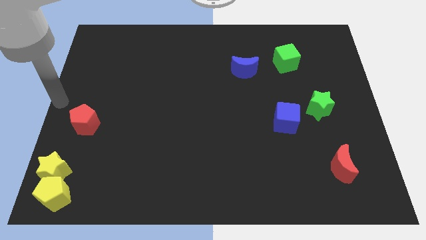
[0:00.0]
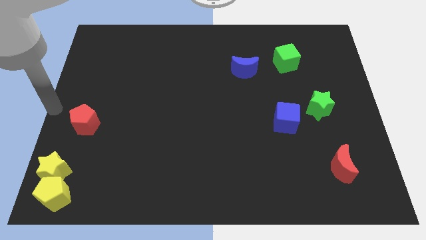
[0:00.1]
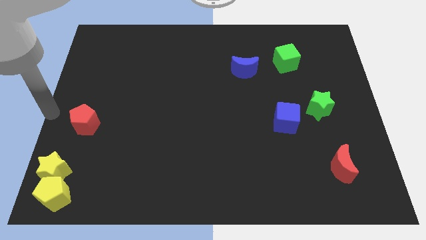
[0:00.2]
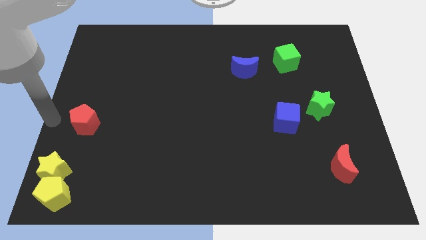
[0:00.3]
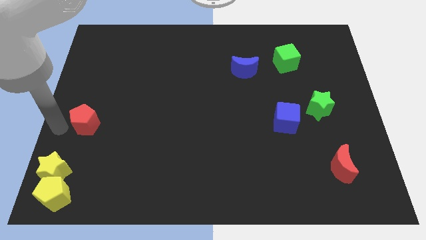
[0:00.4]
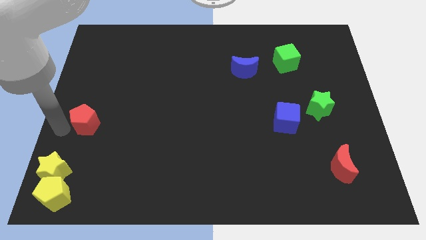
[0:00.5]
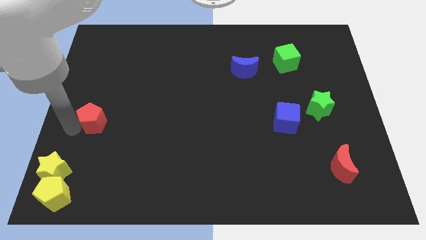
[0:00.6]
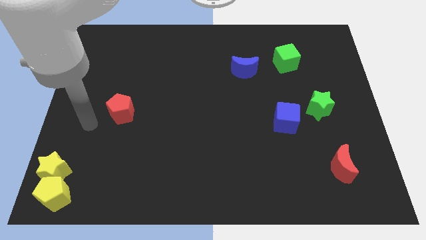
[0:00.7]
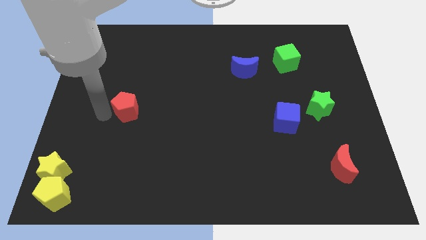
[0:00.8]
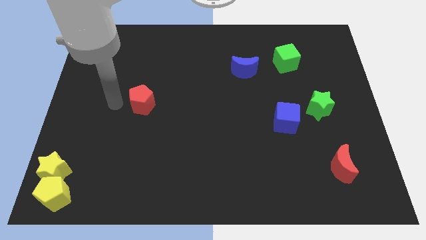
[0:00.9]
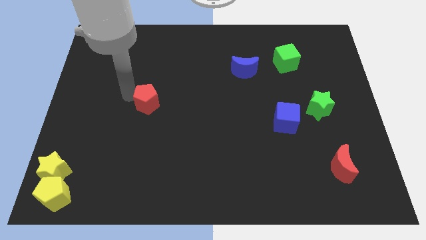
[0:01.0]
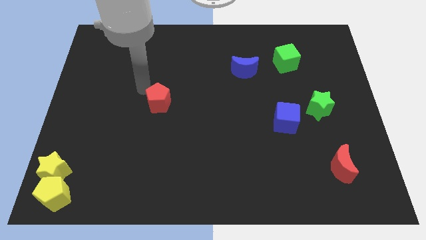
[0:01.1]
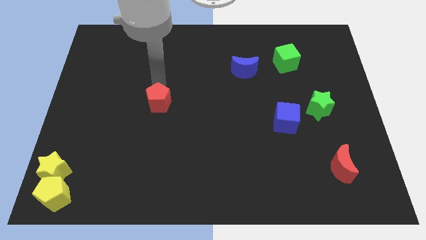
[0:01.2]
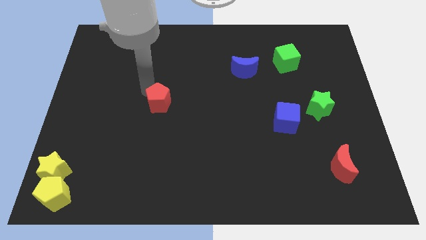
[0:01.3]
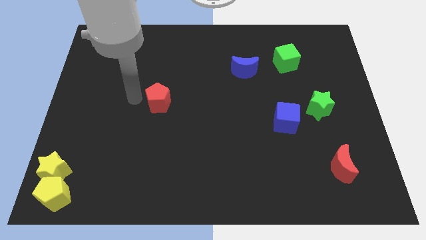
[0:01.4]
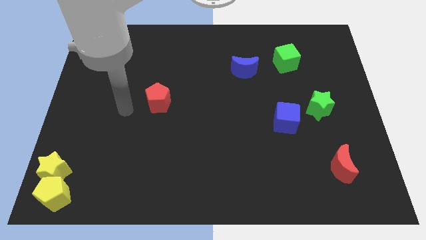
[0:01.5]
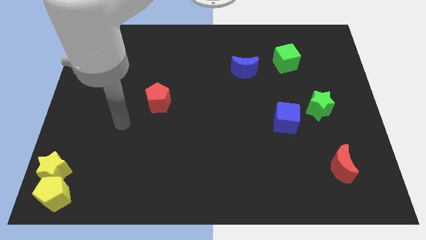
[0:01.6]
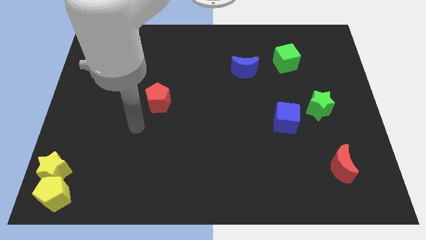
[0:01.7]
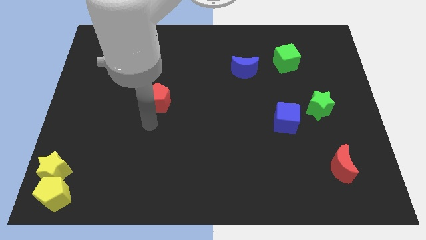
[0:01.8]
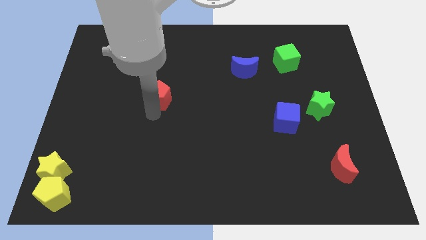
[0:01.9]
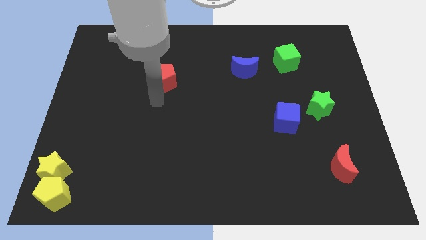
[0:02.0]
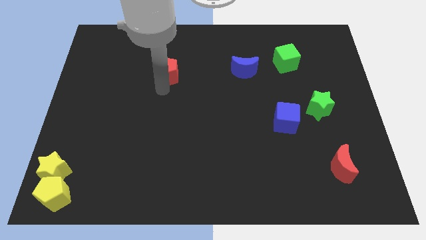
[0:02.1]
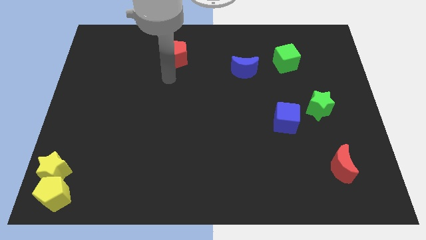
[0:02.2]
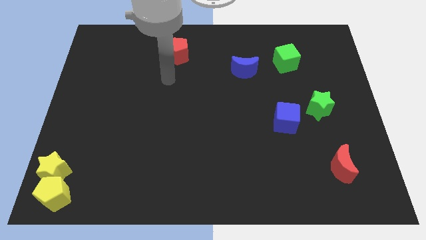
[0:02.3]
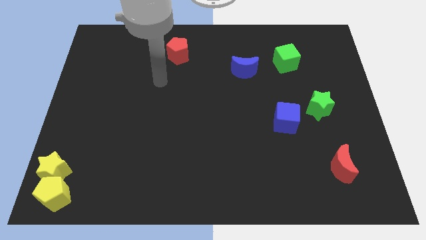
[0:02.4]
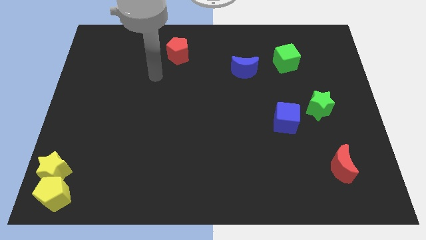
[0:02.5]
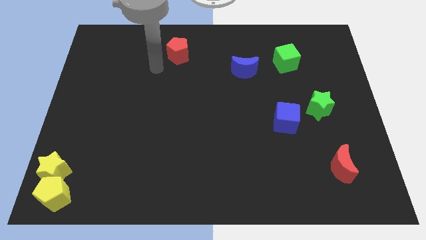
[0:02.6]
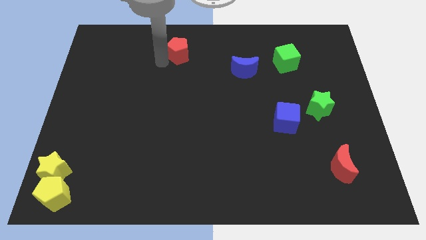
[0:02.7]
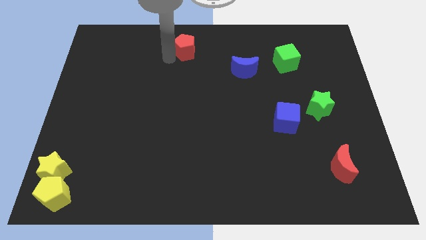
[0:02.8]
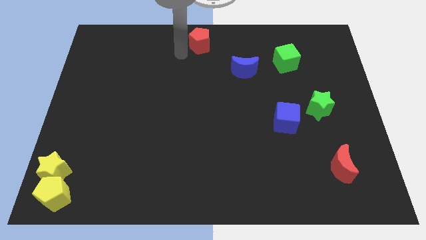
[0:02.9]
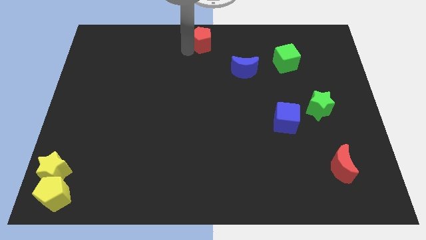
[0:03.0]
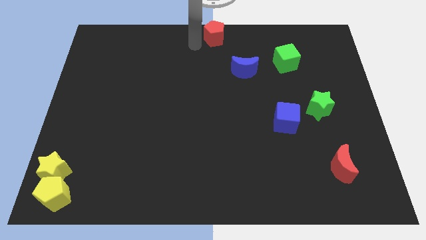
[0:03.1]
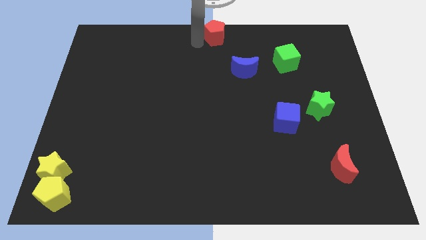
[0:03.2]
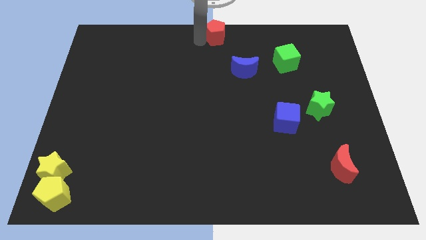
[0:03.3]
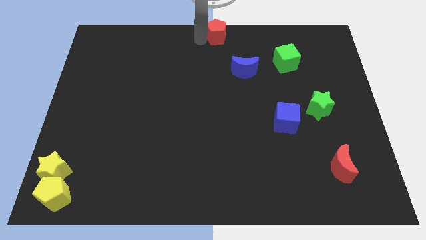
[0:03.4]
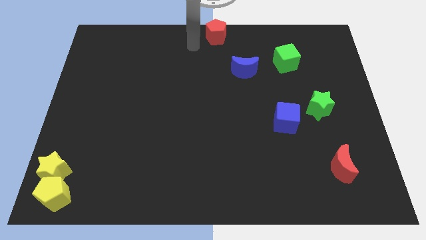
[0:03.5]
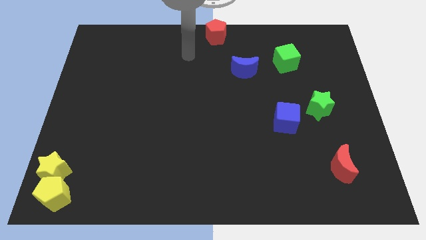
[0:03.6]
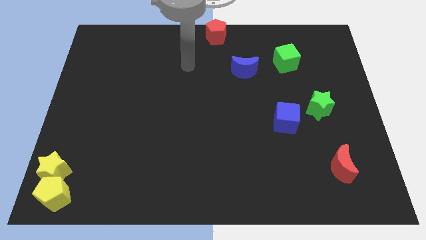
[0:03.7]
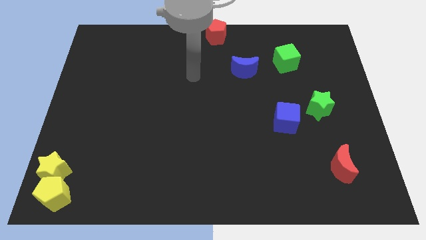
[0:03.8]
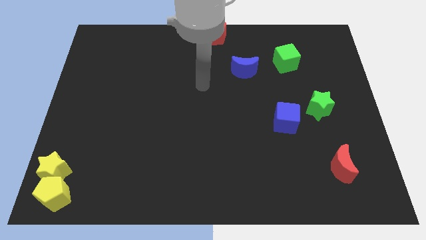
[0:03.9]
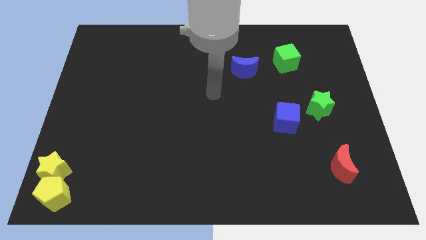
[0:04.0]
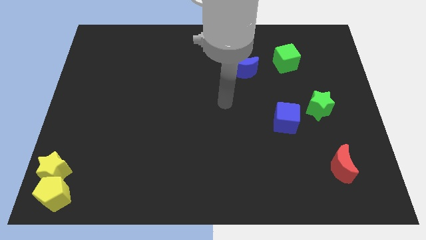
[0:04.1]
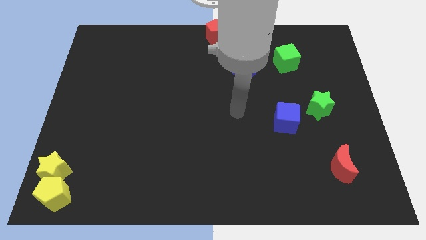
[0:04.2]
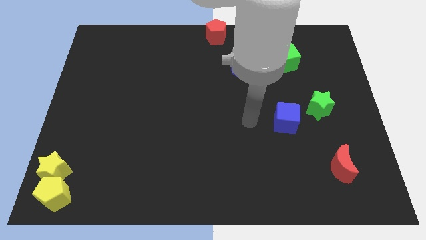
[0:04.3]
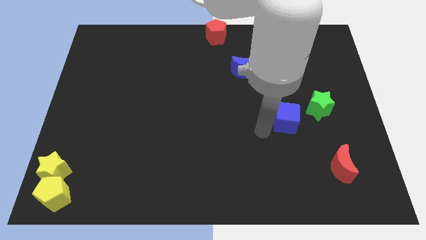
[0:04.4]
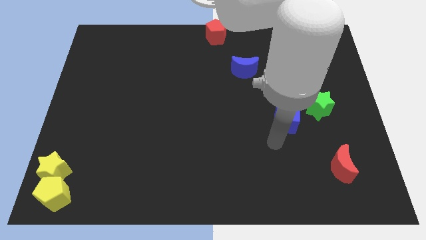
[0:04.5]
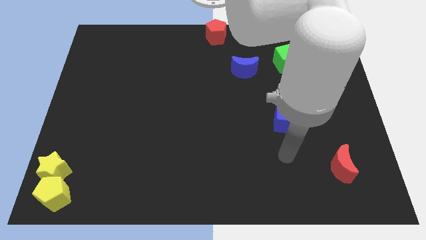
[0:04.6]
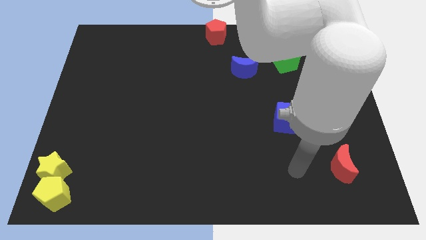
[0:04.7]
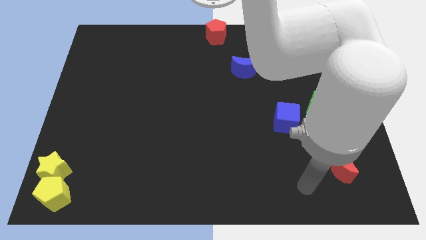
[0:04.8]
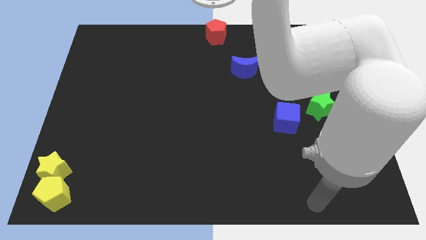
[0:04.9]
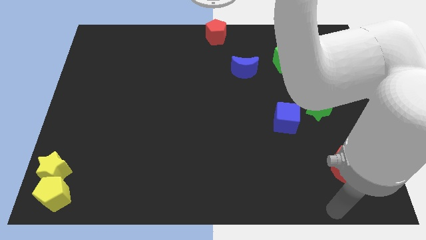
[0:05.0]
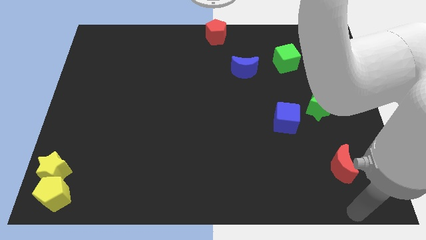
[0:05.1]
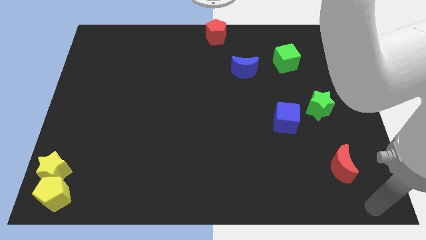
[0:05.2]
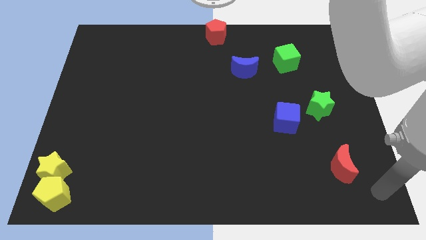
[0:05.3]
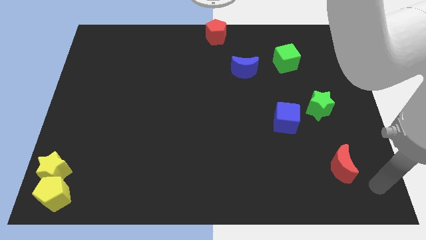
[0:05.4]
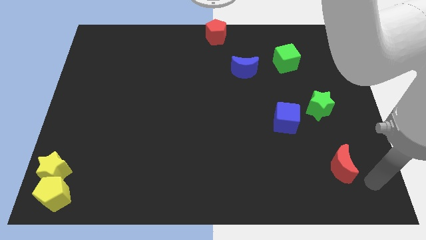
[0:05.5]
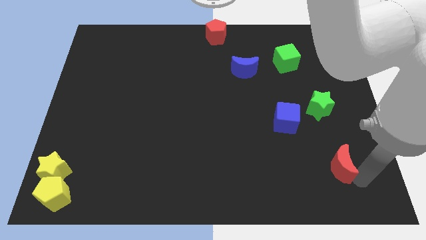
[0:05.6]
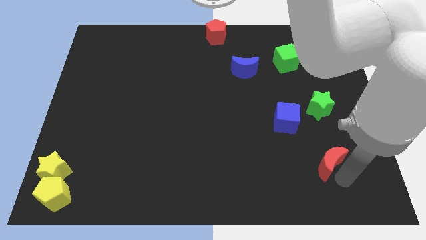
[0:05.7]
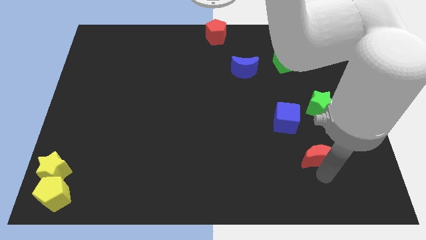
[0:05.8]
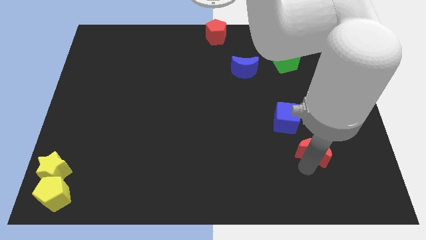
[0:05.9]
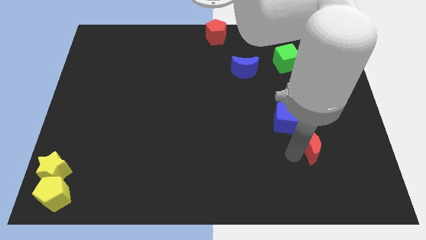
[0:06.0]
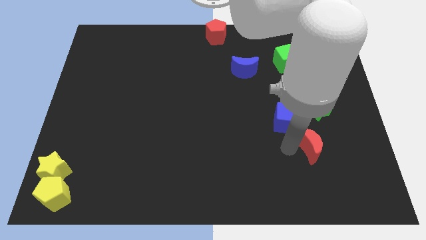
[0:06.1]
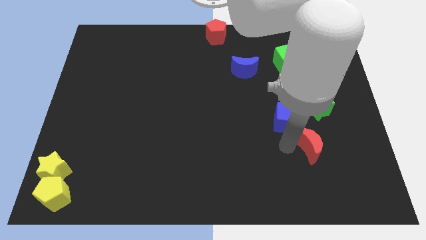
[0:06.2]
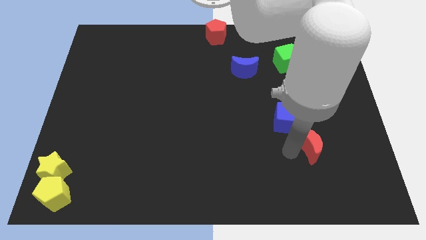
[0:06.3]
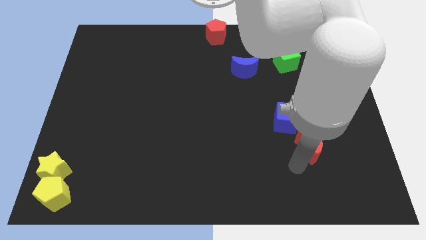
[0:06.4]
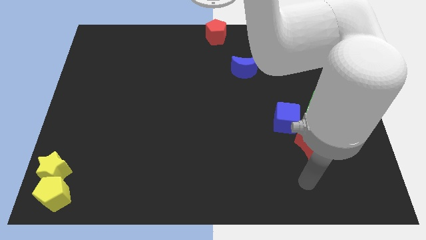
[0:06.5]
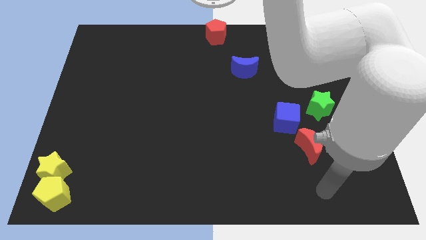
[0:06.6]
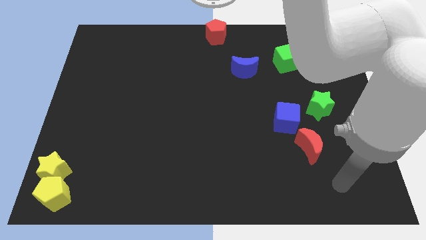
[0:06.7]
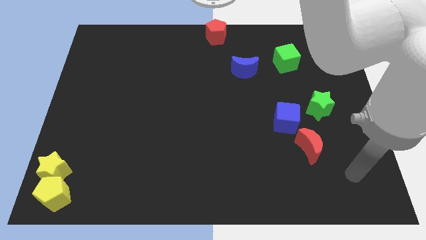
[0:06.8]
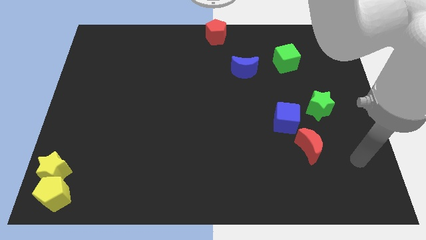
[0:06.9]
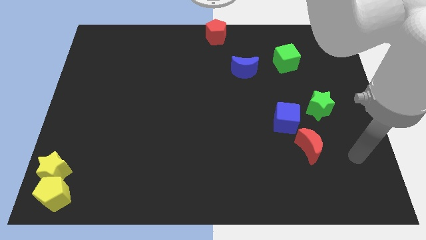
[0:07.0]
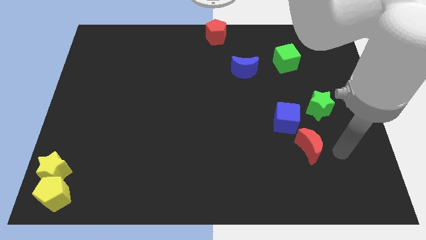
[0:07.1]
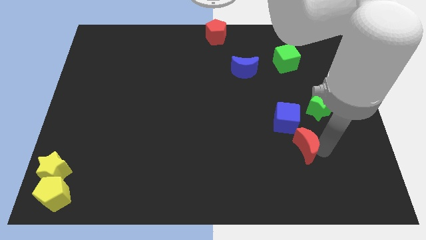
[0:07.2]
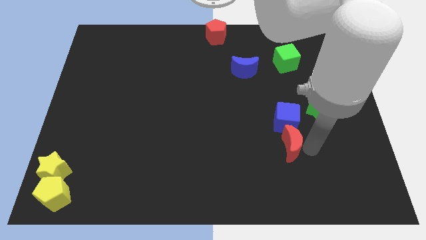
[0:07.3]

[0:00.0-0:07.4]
move the red moon to the top center of the board

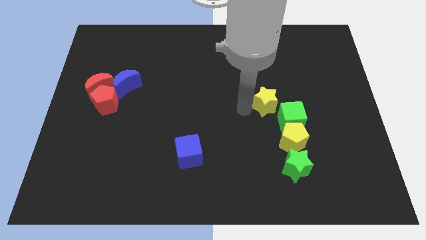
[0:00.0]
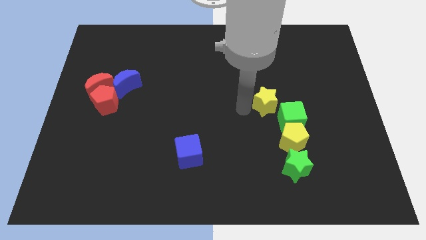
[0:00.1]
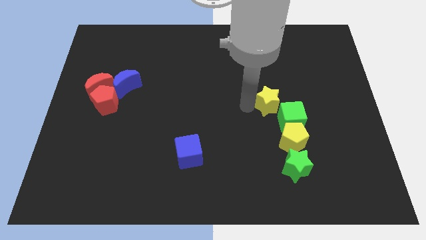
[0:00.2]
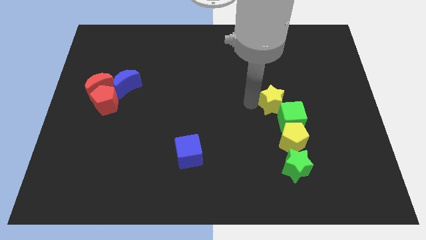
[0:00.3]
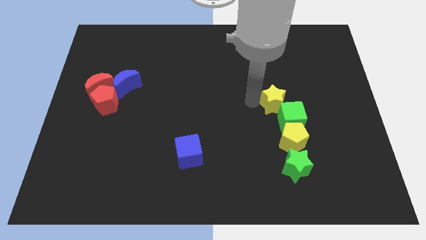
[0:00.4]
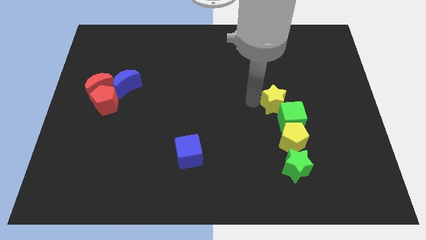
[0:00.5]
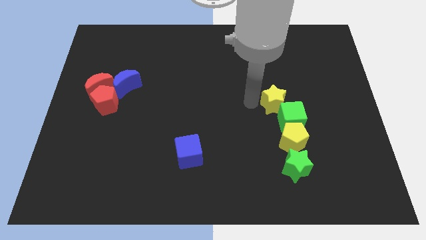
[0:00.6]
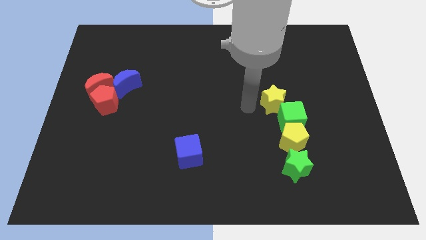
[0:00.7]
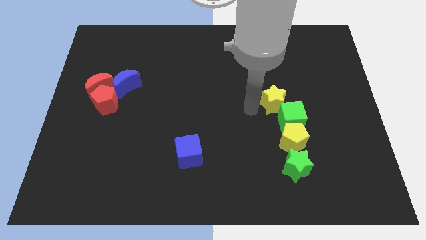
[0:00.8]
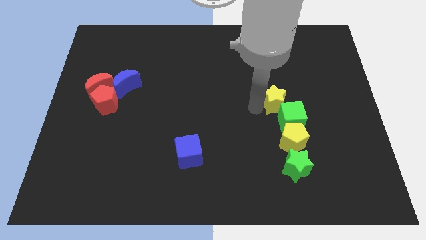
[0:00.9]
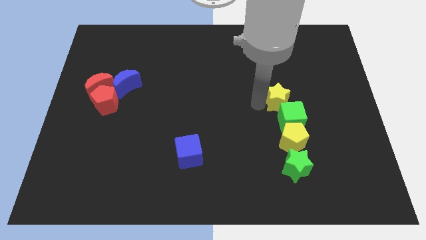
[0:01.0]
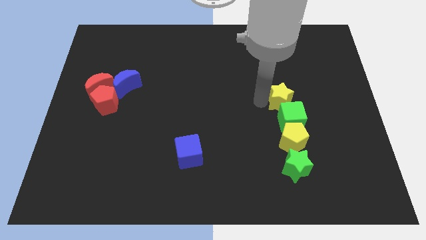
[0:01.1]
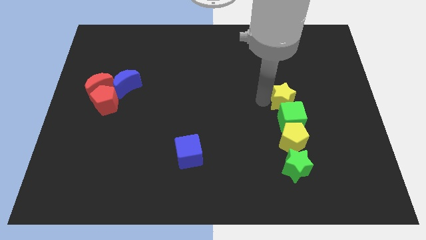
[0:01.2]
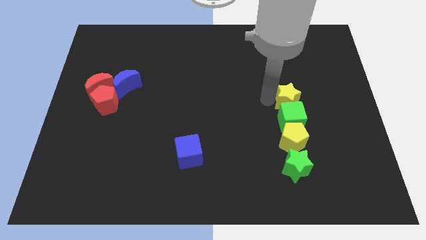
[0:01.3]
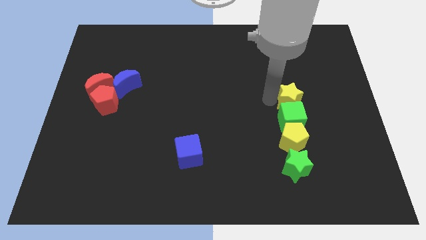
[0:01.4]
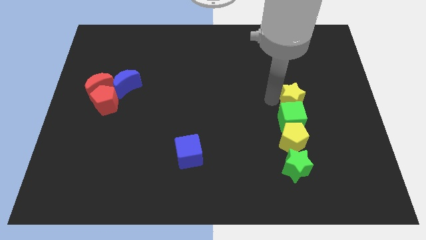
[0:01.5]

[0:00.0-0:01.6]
place the yellow star to the top of the green cube

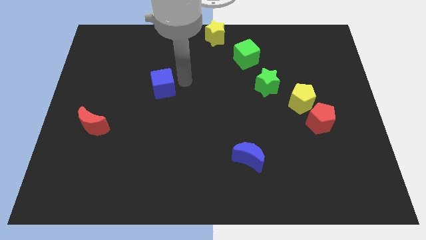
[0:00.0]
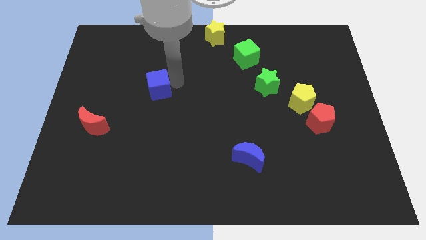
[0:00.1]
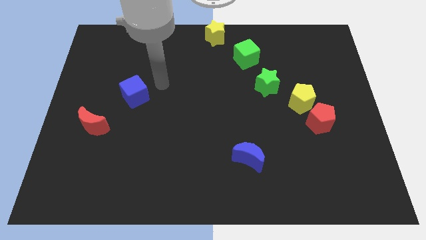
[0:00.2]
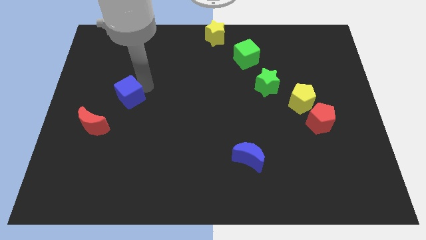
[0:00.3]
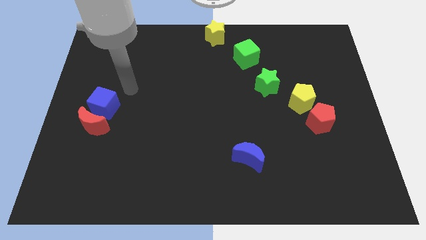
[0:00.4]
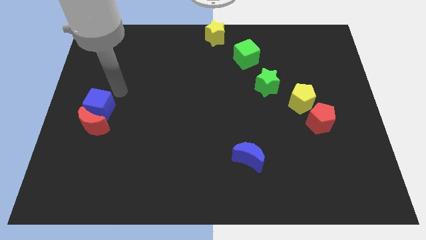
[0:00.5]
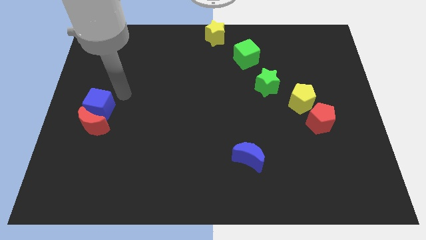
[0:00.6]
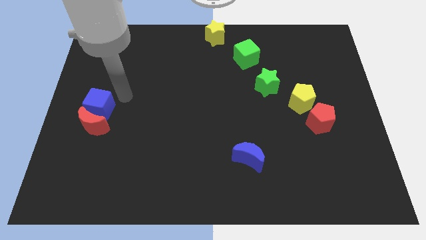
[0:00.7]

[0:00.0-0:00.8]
move blue cube above the red moon
